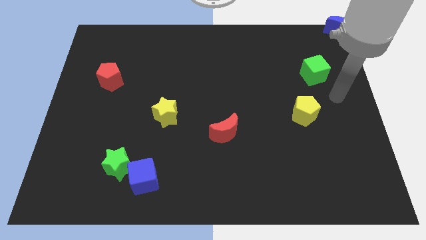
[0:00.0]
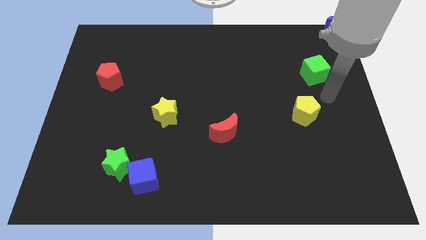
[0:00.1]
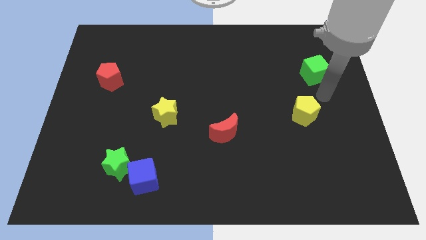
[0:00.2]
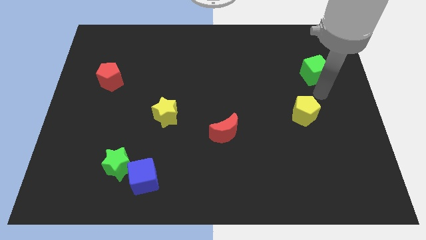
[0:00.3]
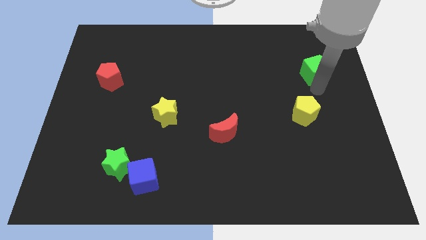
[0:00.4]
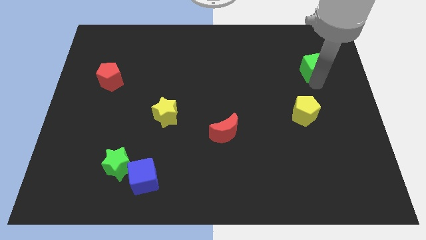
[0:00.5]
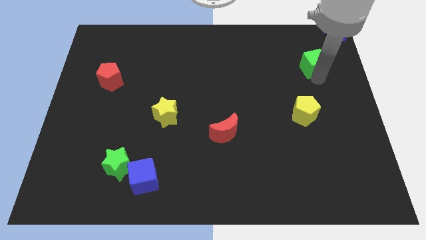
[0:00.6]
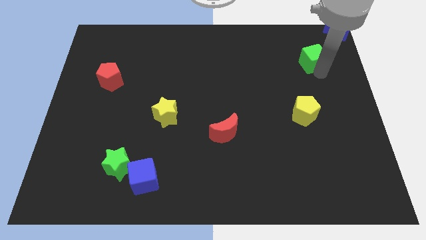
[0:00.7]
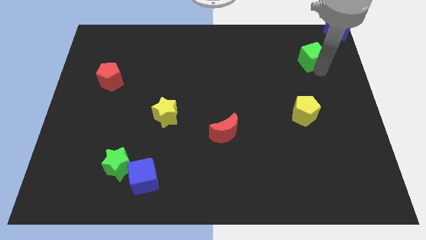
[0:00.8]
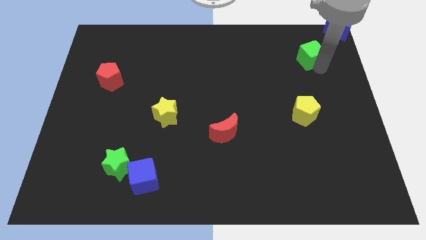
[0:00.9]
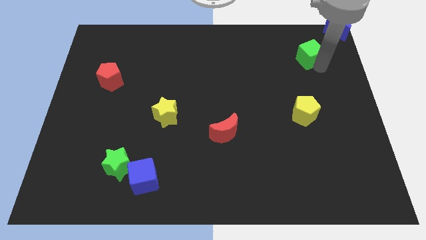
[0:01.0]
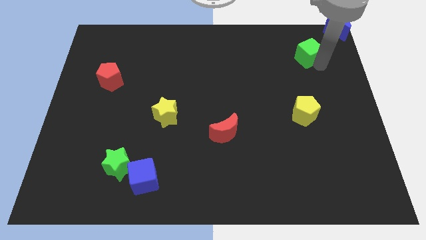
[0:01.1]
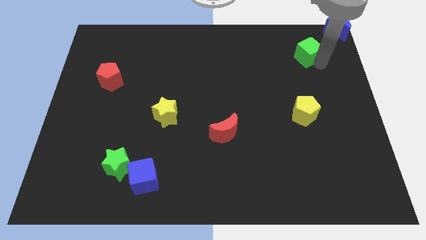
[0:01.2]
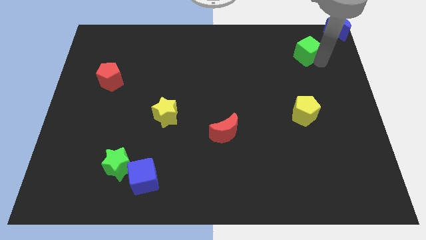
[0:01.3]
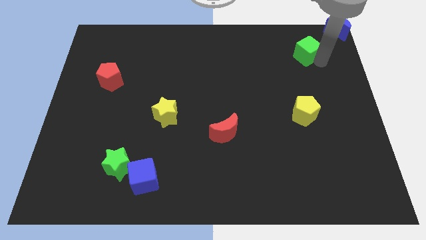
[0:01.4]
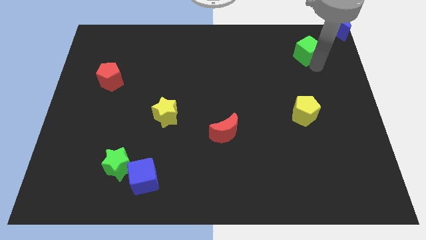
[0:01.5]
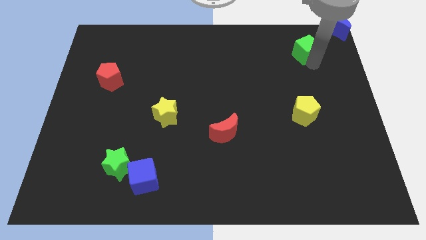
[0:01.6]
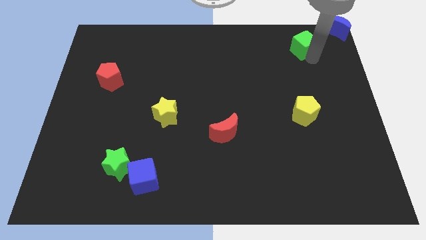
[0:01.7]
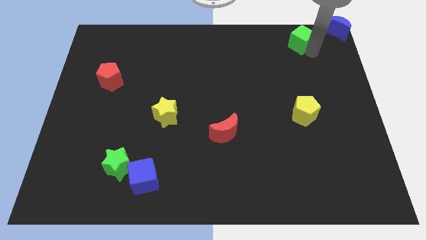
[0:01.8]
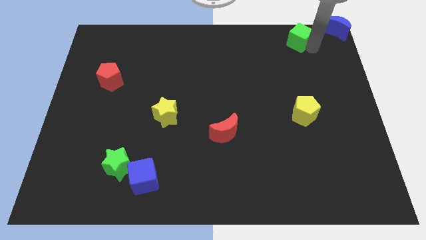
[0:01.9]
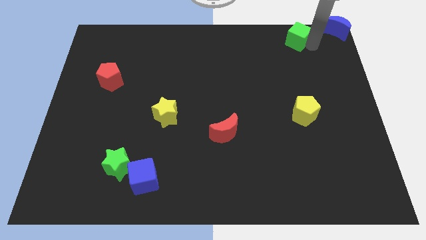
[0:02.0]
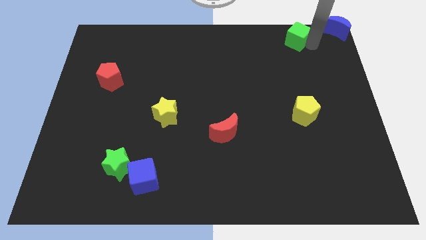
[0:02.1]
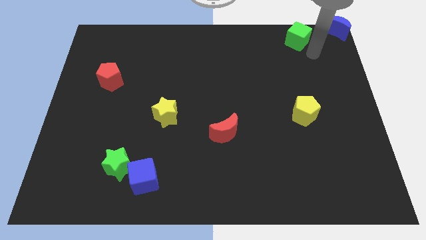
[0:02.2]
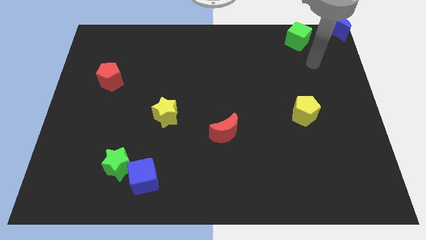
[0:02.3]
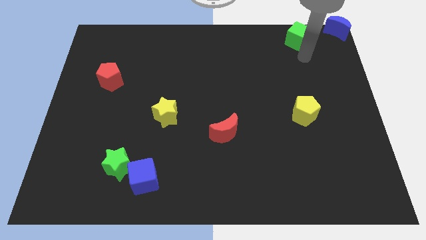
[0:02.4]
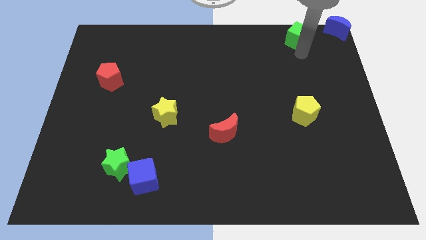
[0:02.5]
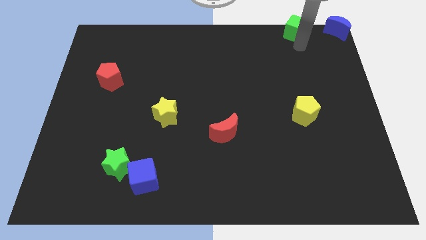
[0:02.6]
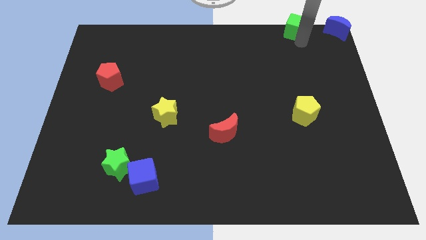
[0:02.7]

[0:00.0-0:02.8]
push the green cube towards the left side of the blue crescent

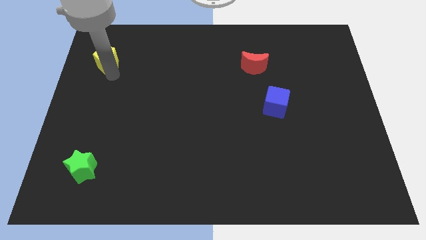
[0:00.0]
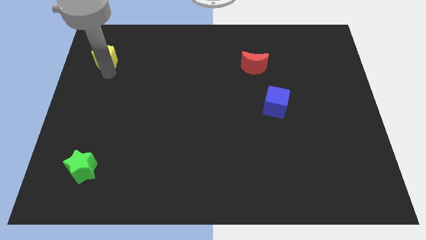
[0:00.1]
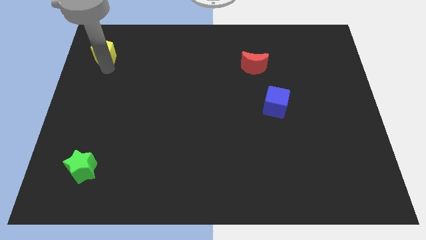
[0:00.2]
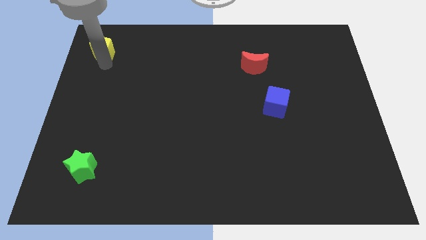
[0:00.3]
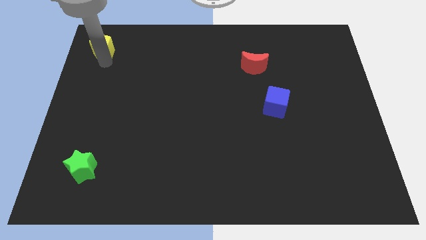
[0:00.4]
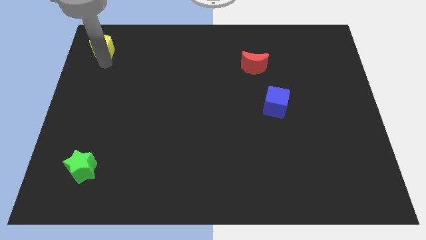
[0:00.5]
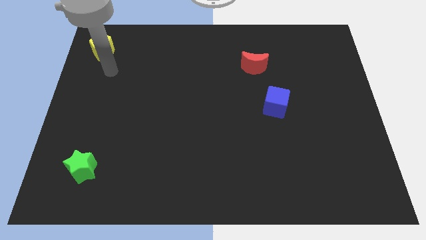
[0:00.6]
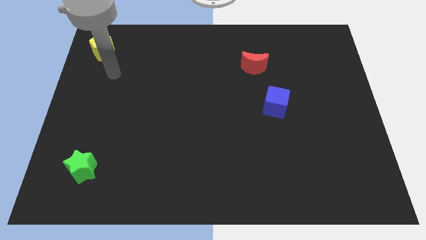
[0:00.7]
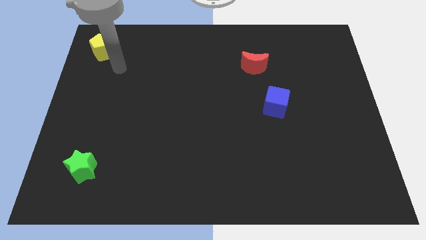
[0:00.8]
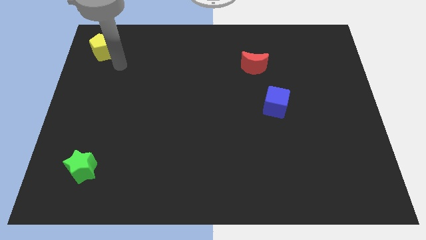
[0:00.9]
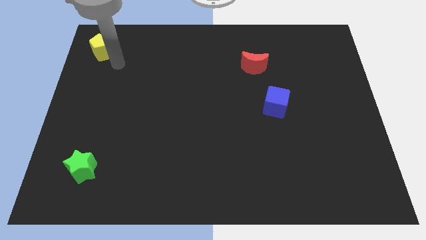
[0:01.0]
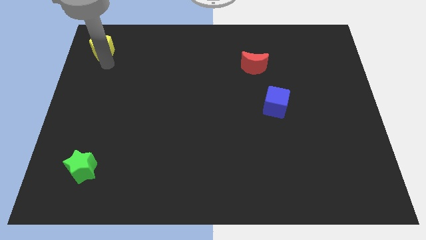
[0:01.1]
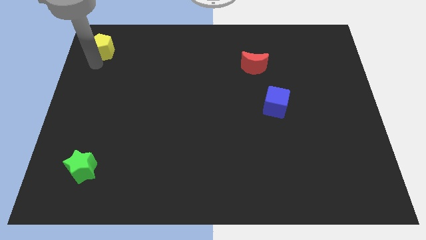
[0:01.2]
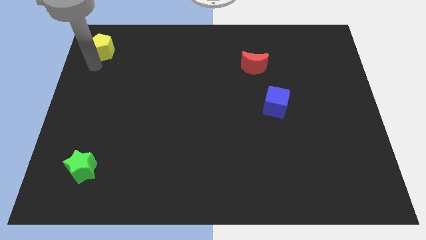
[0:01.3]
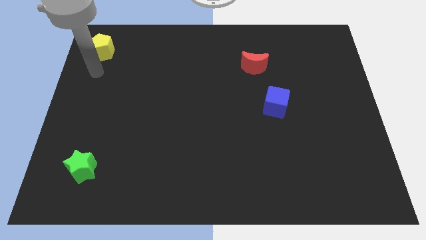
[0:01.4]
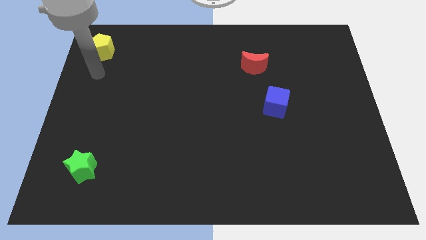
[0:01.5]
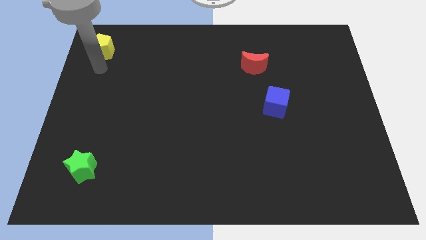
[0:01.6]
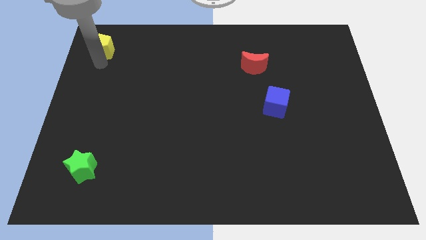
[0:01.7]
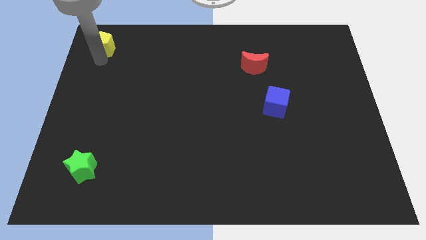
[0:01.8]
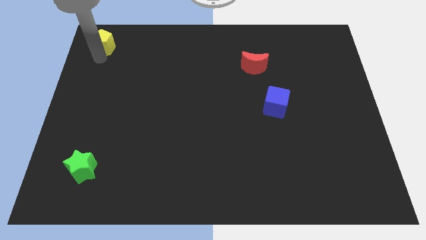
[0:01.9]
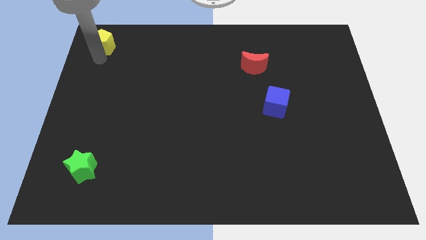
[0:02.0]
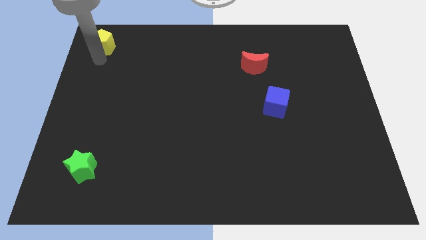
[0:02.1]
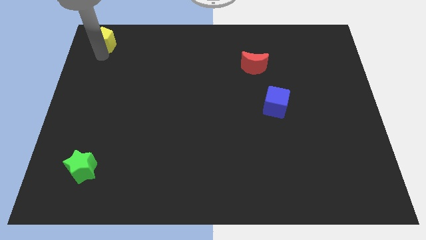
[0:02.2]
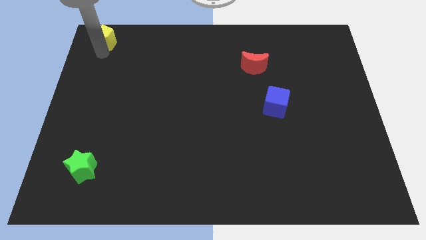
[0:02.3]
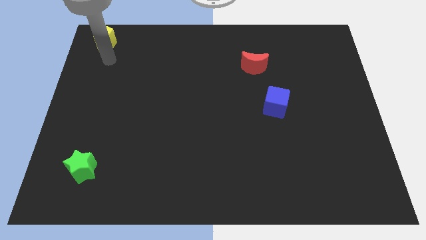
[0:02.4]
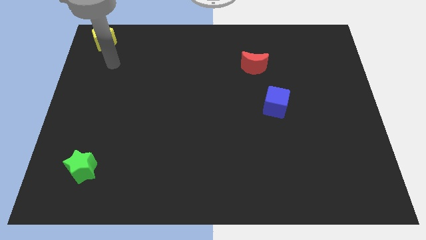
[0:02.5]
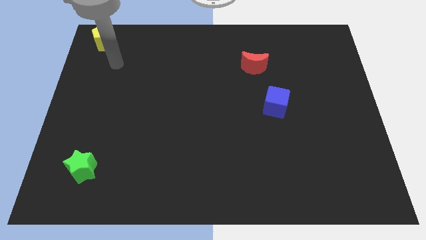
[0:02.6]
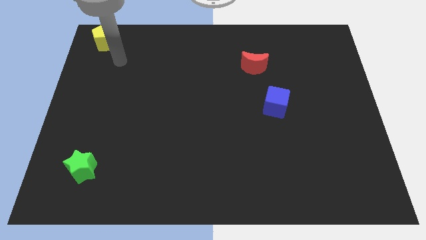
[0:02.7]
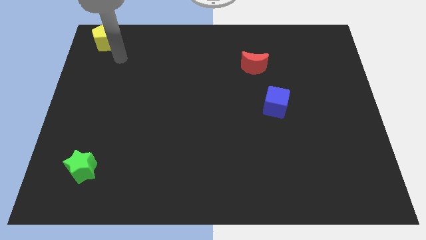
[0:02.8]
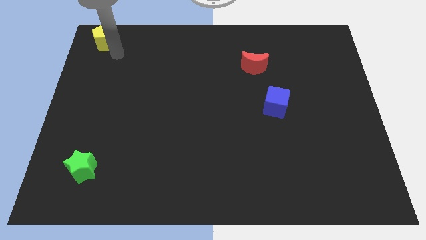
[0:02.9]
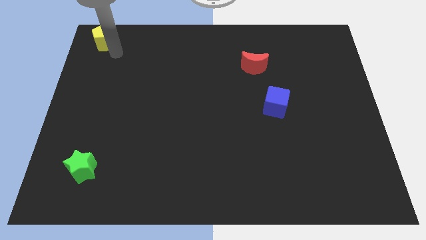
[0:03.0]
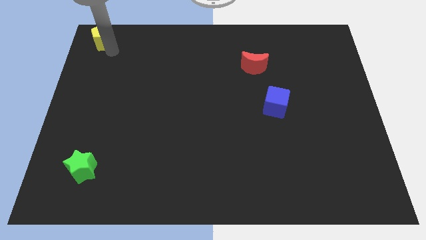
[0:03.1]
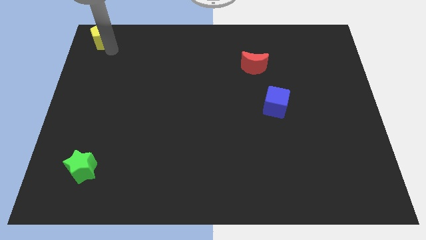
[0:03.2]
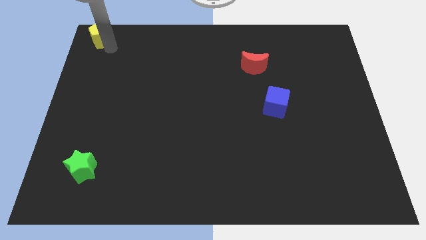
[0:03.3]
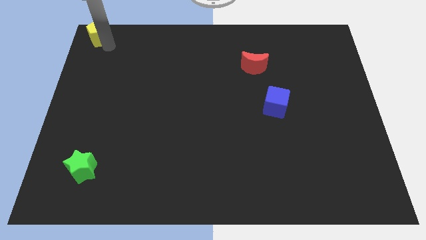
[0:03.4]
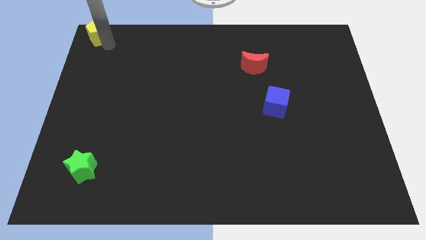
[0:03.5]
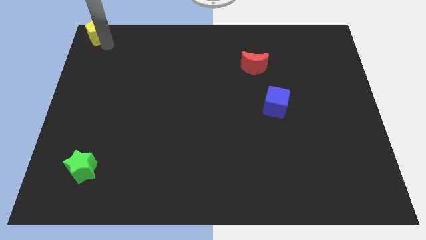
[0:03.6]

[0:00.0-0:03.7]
place the yellow pentagon to the top left

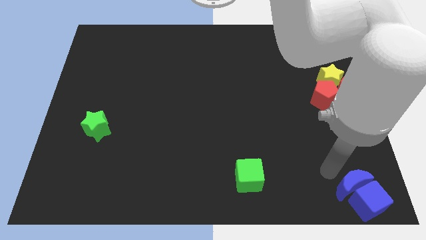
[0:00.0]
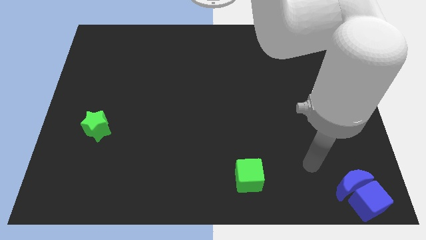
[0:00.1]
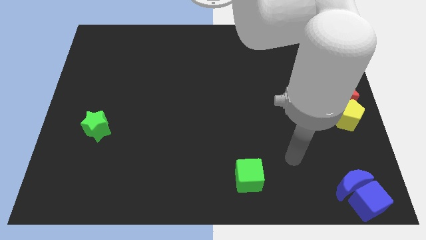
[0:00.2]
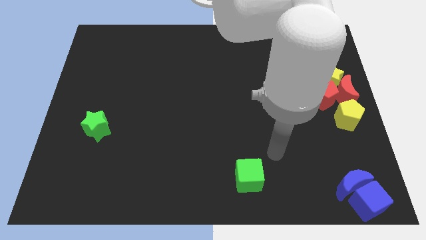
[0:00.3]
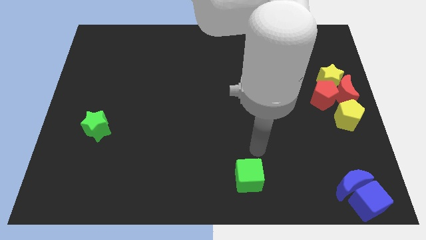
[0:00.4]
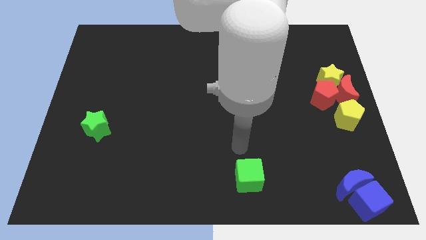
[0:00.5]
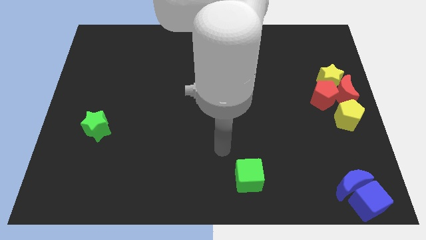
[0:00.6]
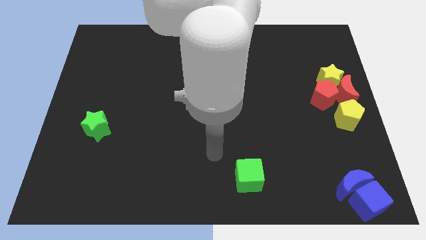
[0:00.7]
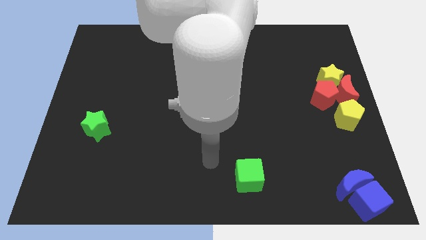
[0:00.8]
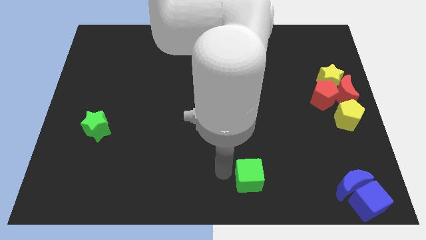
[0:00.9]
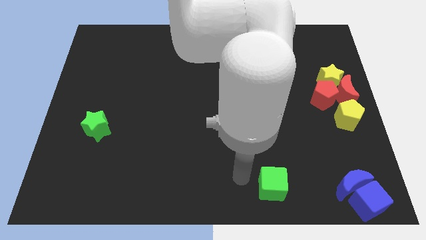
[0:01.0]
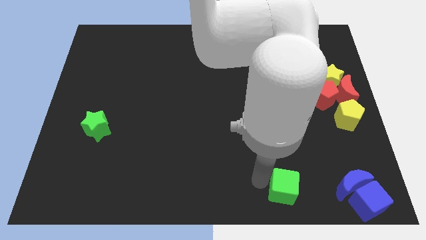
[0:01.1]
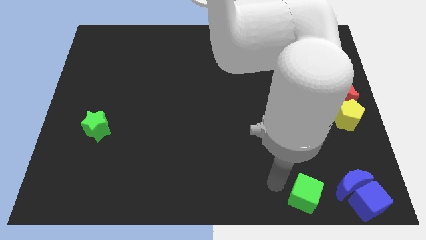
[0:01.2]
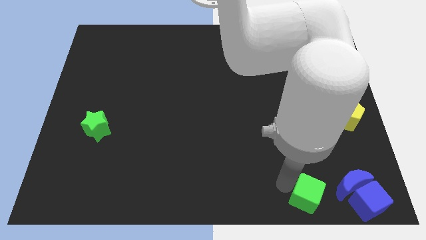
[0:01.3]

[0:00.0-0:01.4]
push the green cube towards the blue blocks

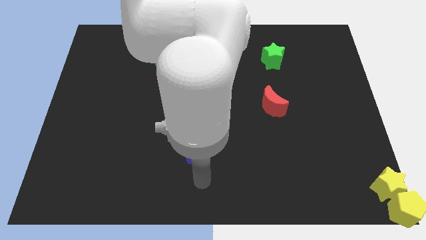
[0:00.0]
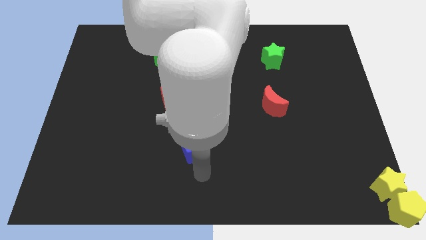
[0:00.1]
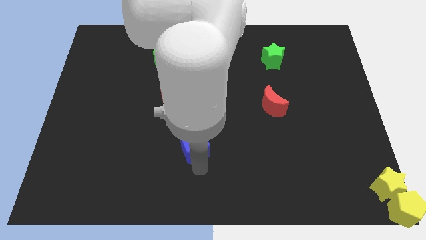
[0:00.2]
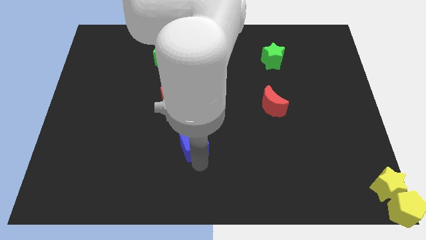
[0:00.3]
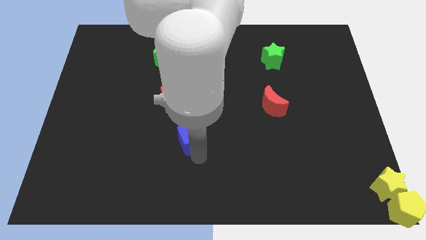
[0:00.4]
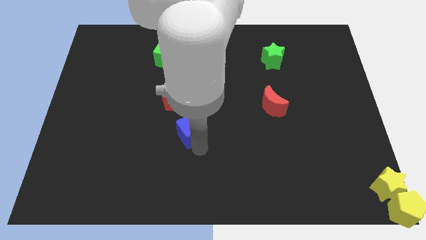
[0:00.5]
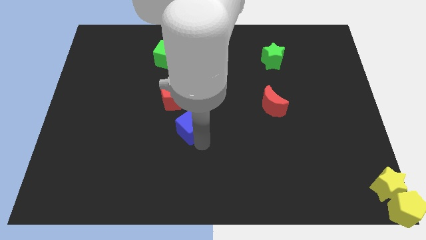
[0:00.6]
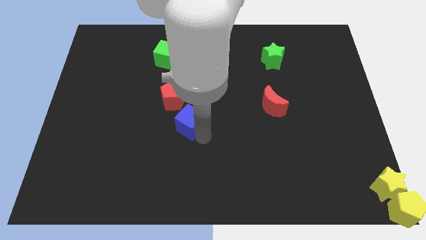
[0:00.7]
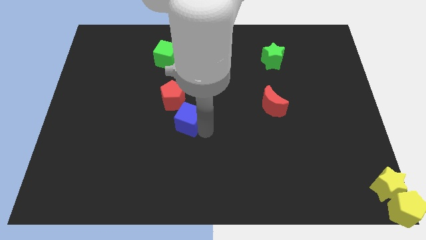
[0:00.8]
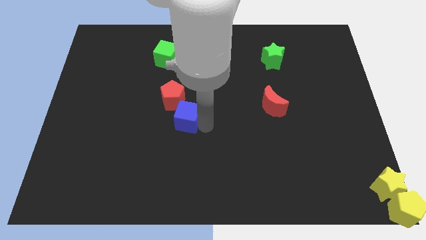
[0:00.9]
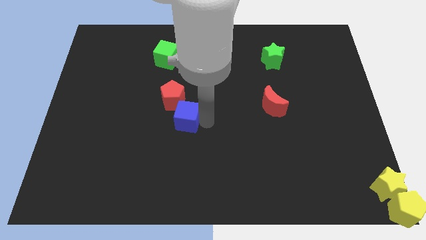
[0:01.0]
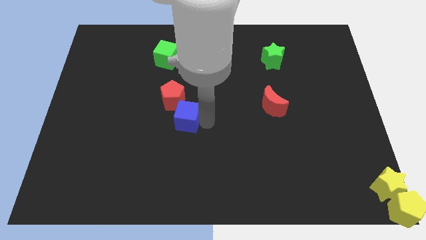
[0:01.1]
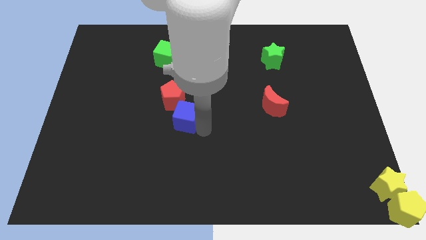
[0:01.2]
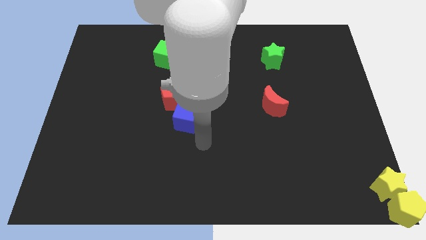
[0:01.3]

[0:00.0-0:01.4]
push the blue cube to the bottom right of the red pentagon
